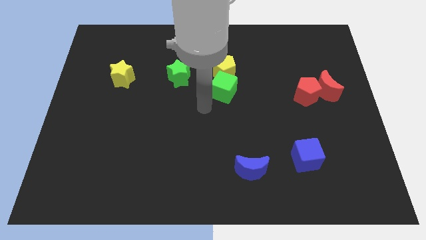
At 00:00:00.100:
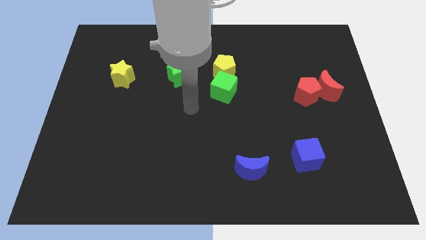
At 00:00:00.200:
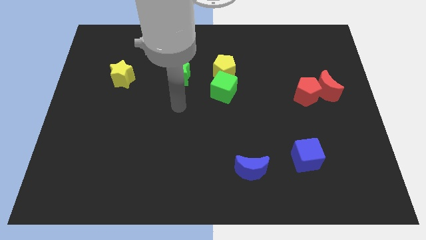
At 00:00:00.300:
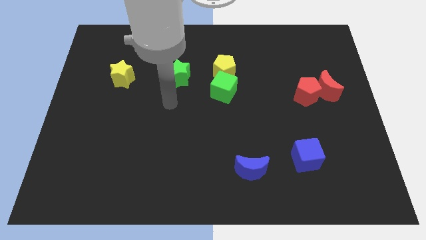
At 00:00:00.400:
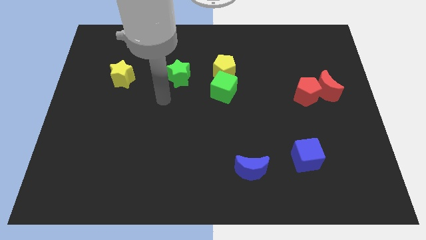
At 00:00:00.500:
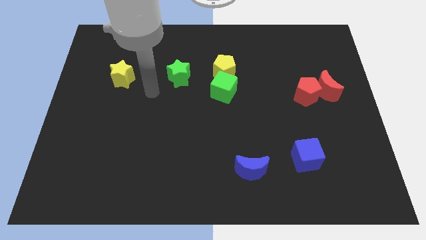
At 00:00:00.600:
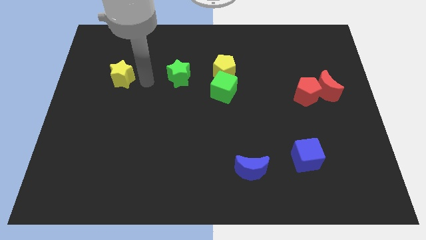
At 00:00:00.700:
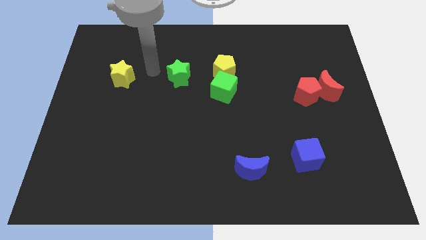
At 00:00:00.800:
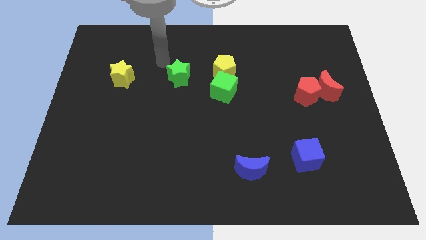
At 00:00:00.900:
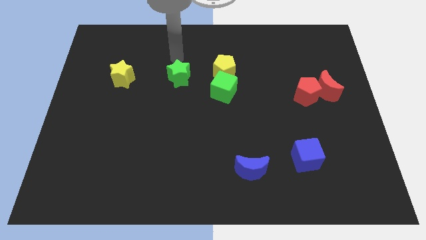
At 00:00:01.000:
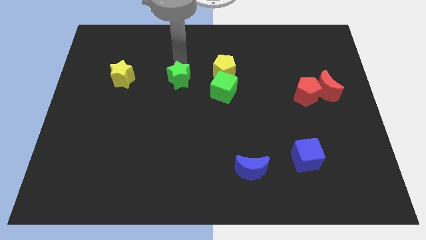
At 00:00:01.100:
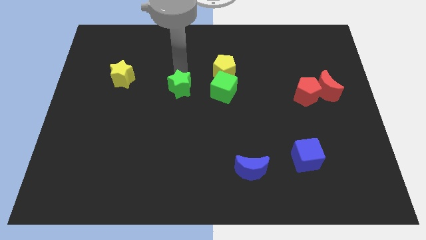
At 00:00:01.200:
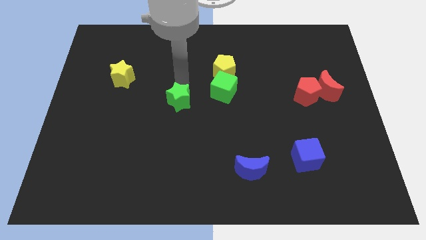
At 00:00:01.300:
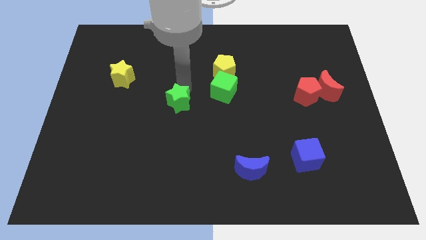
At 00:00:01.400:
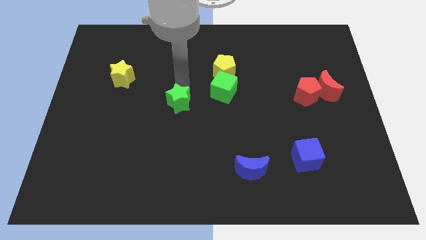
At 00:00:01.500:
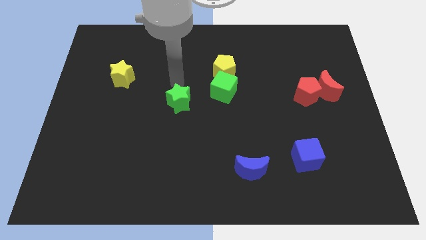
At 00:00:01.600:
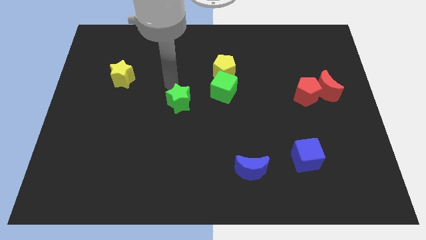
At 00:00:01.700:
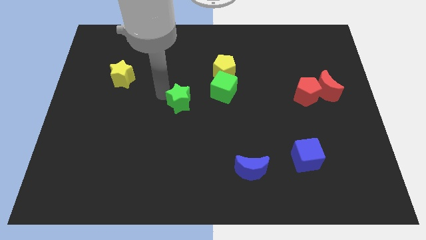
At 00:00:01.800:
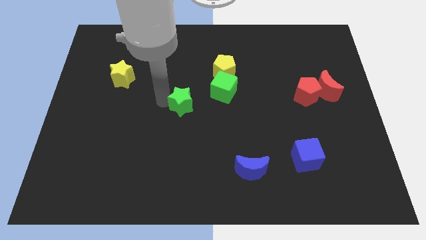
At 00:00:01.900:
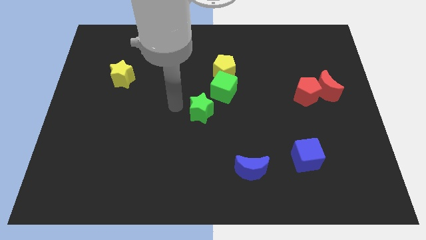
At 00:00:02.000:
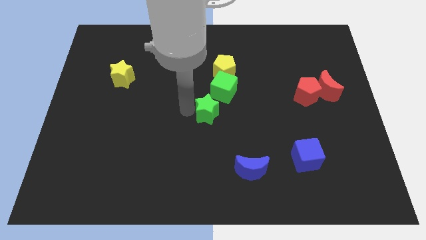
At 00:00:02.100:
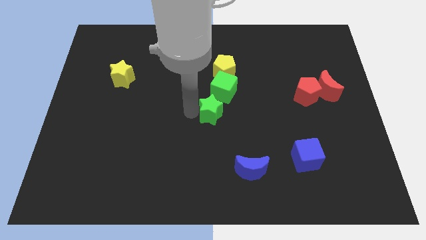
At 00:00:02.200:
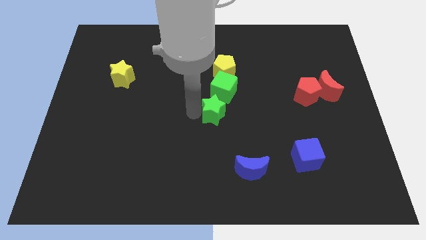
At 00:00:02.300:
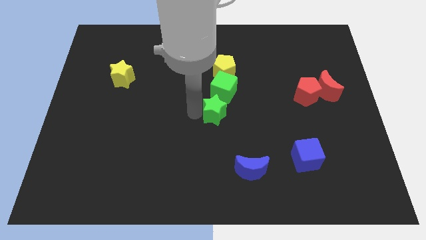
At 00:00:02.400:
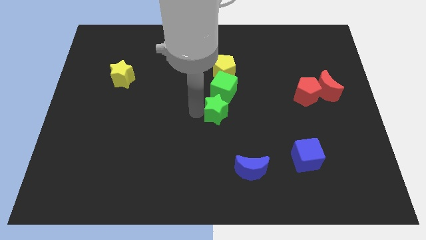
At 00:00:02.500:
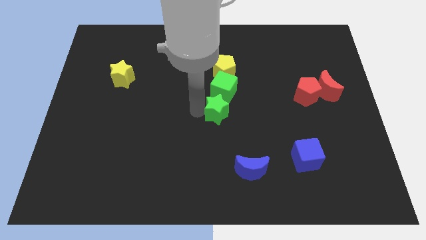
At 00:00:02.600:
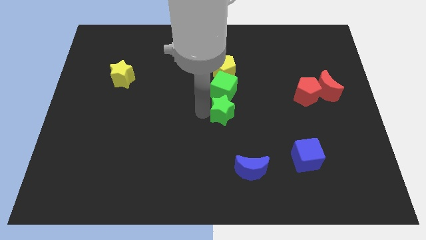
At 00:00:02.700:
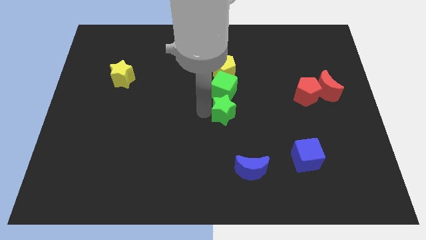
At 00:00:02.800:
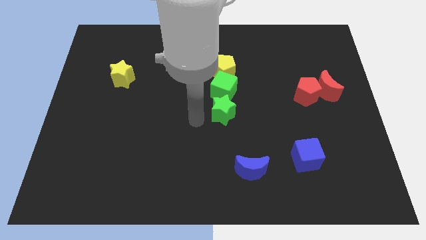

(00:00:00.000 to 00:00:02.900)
slide the green star diagonally to the bottom side of the green cube

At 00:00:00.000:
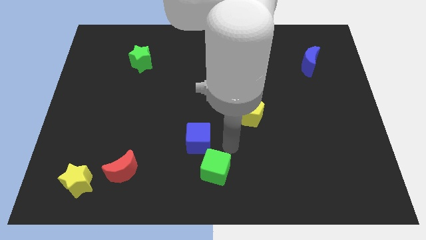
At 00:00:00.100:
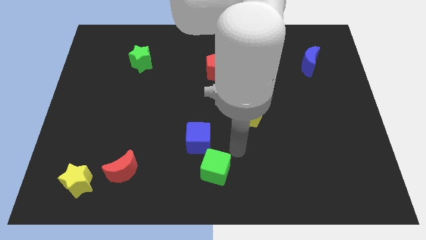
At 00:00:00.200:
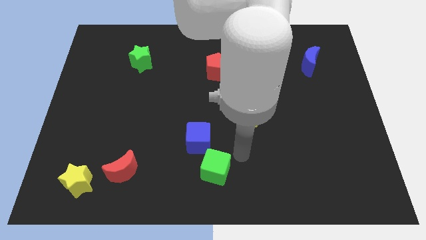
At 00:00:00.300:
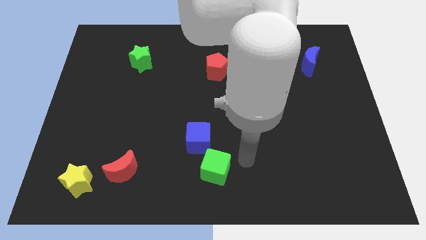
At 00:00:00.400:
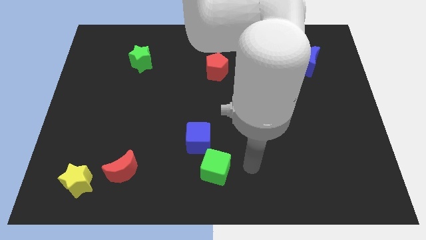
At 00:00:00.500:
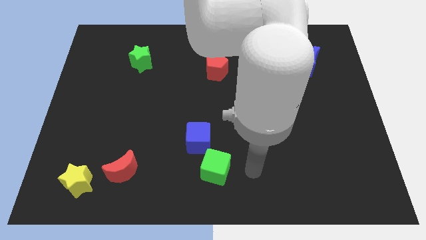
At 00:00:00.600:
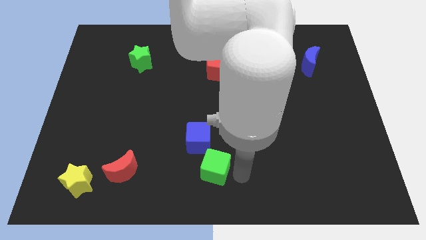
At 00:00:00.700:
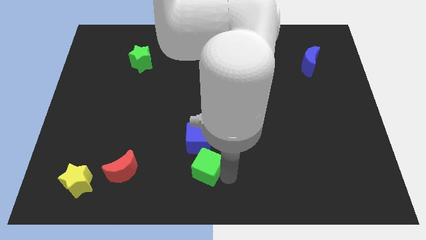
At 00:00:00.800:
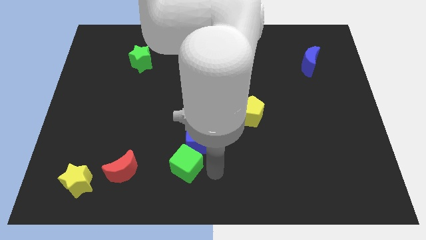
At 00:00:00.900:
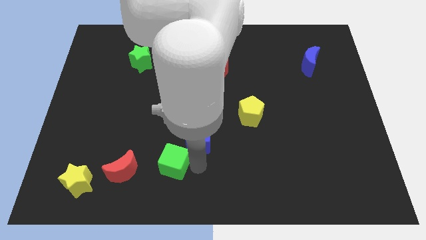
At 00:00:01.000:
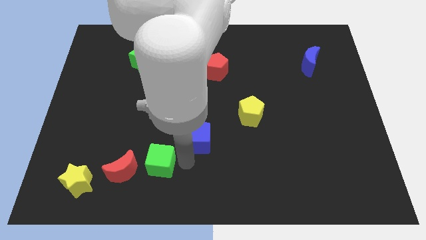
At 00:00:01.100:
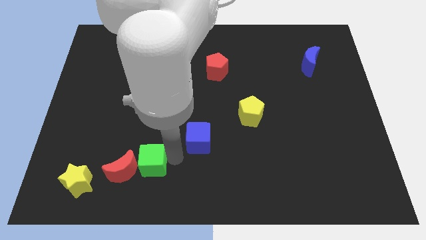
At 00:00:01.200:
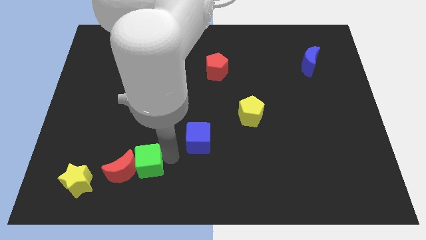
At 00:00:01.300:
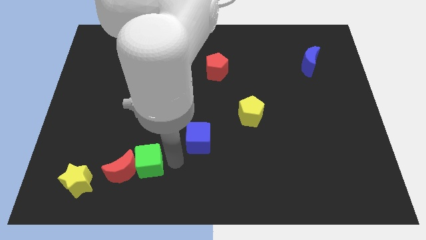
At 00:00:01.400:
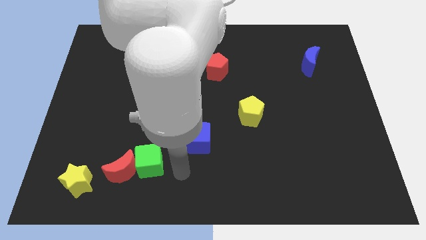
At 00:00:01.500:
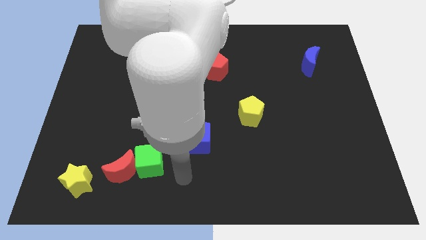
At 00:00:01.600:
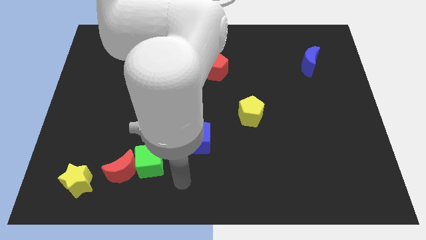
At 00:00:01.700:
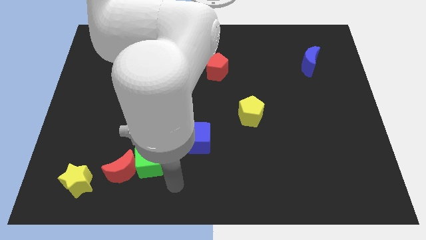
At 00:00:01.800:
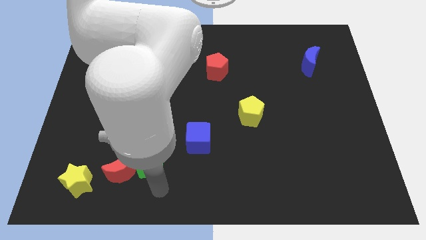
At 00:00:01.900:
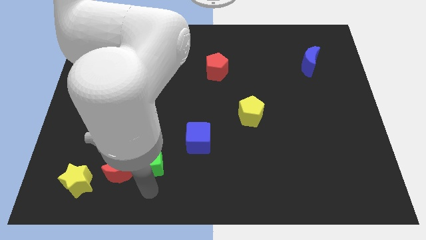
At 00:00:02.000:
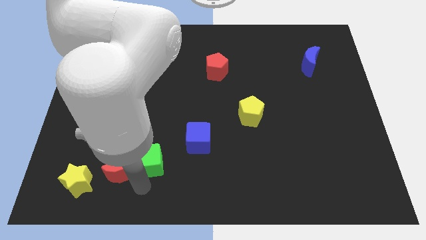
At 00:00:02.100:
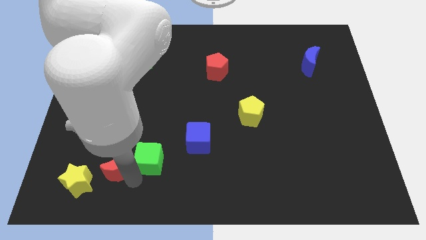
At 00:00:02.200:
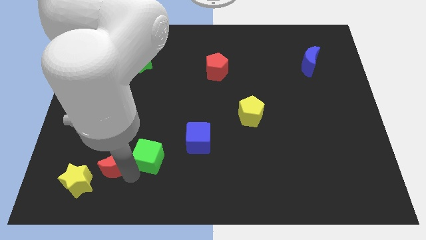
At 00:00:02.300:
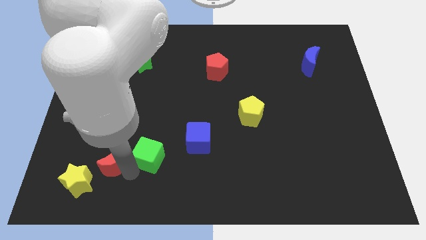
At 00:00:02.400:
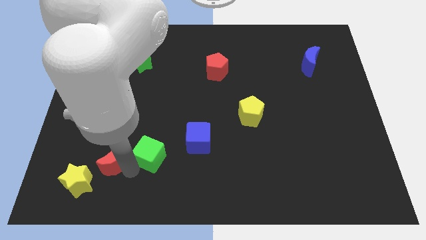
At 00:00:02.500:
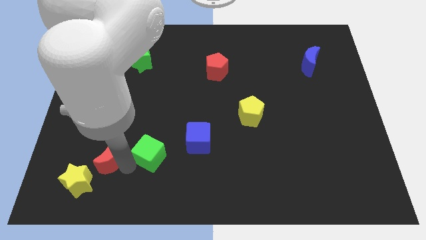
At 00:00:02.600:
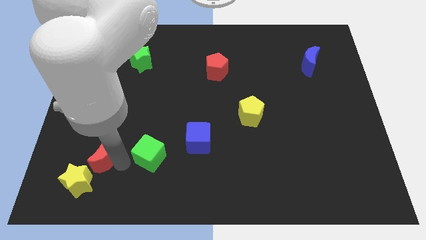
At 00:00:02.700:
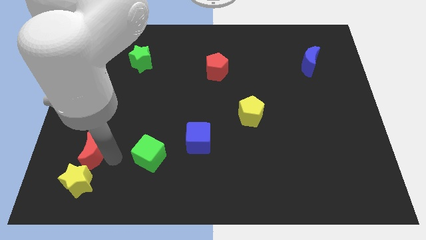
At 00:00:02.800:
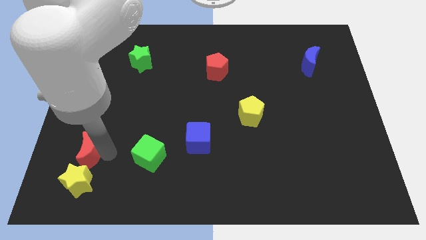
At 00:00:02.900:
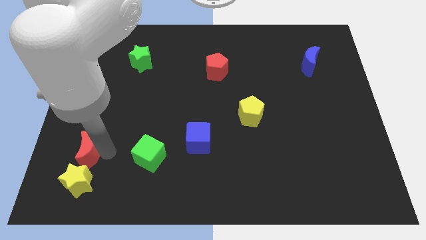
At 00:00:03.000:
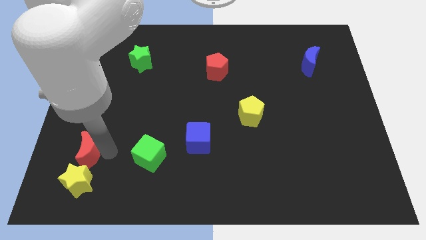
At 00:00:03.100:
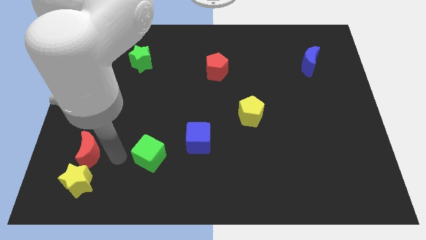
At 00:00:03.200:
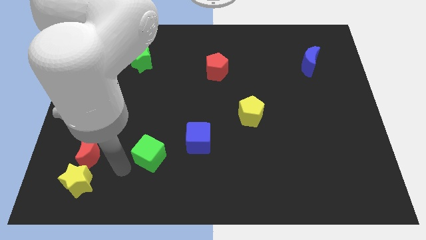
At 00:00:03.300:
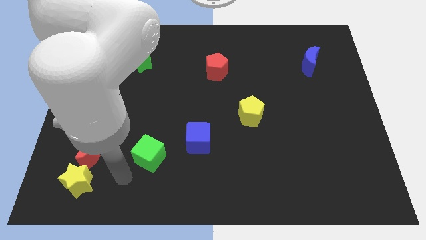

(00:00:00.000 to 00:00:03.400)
put the red moon above the yellow star

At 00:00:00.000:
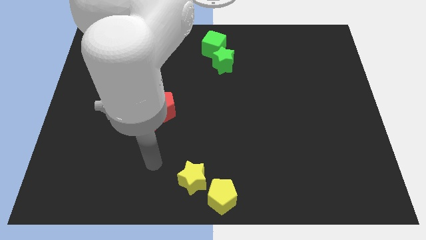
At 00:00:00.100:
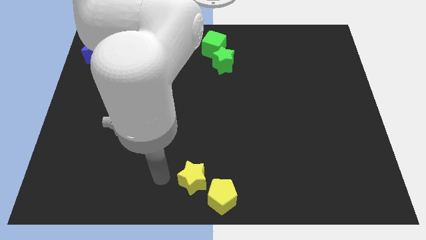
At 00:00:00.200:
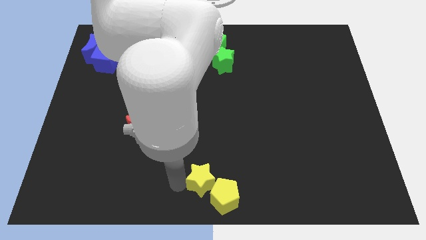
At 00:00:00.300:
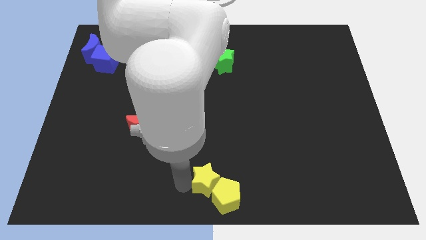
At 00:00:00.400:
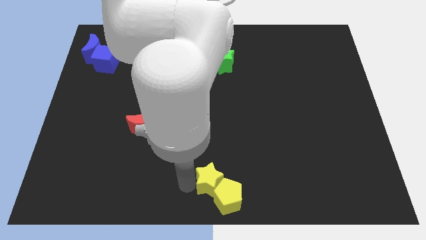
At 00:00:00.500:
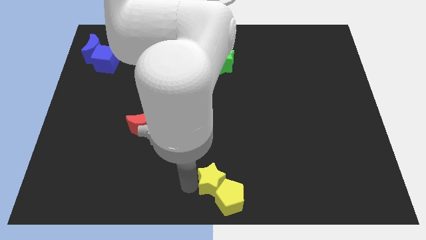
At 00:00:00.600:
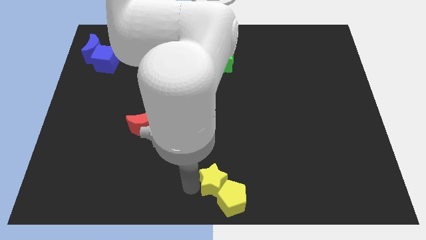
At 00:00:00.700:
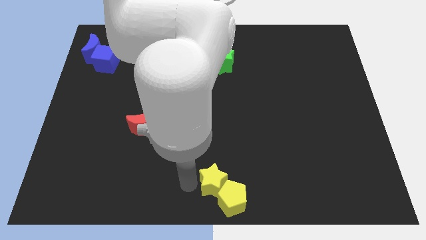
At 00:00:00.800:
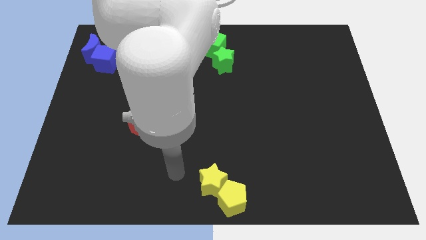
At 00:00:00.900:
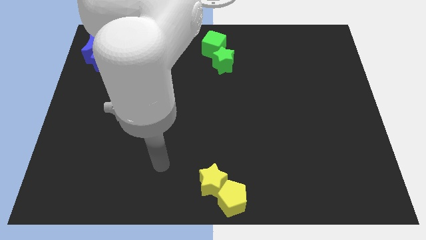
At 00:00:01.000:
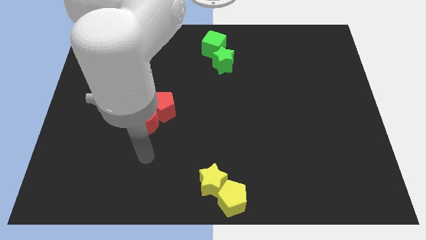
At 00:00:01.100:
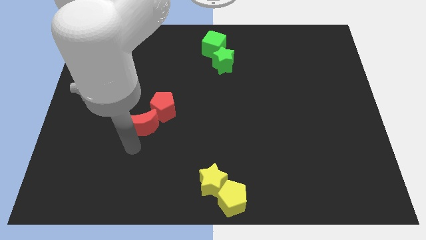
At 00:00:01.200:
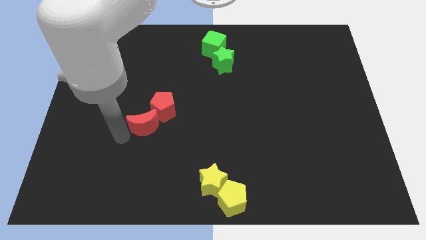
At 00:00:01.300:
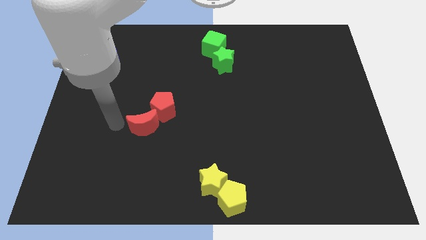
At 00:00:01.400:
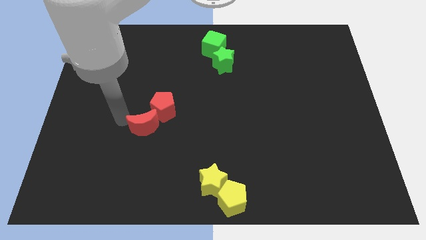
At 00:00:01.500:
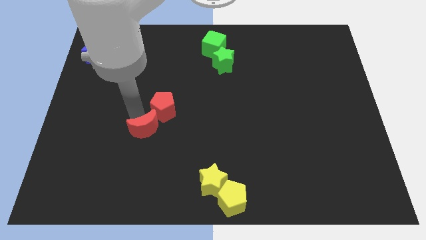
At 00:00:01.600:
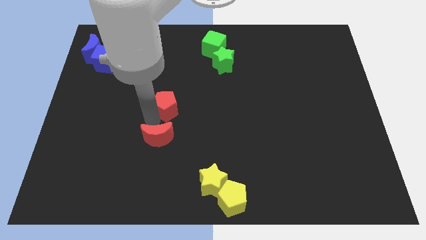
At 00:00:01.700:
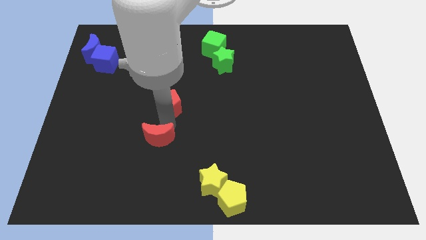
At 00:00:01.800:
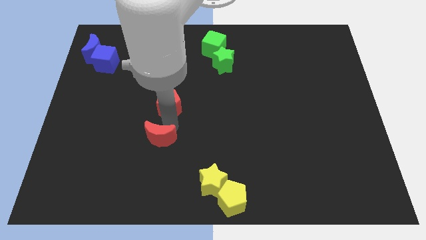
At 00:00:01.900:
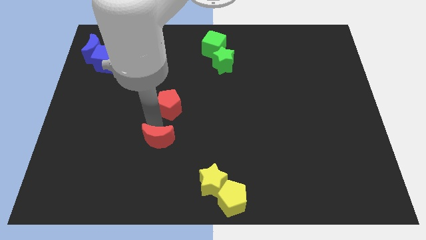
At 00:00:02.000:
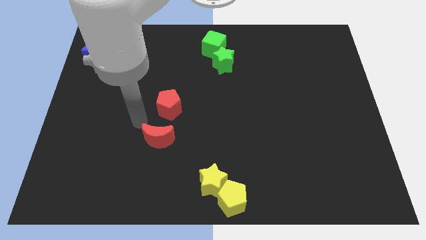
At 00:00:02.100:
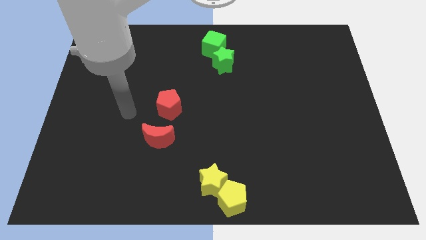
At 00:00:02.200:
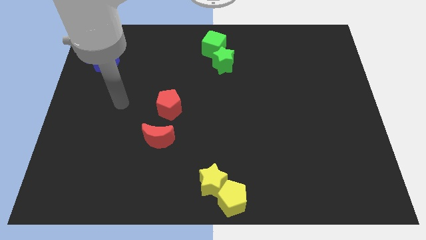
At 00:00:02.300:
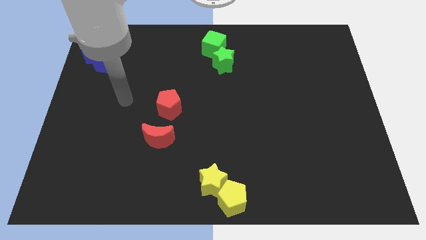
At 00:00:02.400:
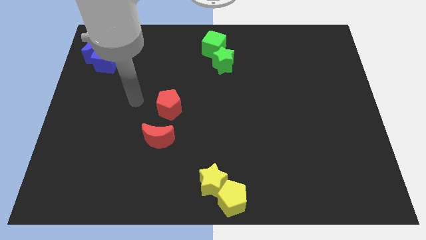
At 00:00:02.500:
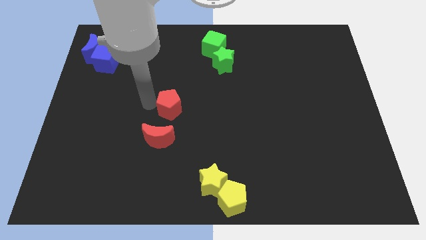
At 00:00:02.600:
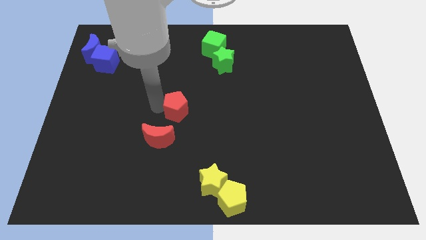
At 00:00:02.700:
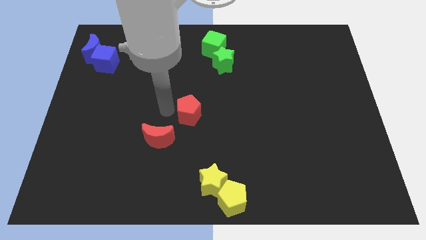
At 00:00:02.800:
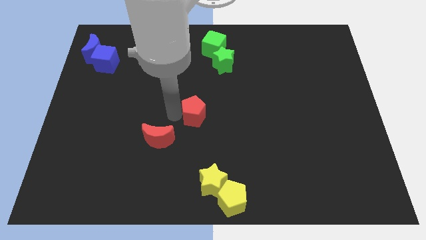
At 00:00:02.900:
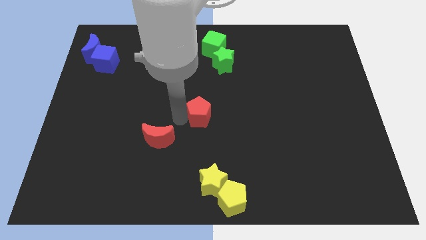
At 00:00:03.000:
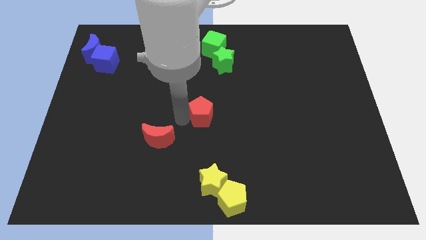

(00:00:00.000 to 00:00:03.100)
move red pentagon to the center
